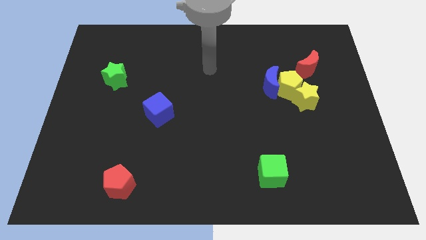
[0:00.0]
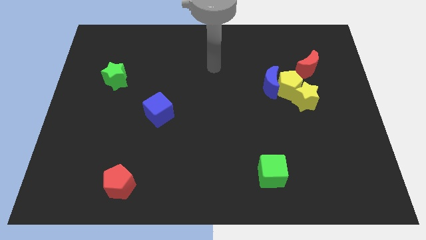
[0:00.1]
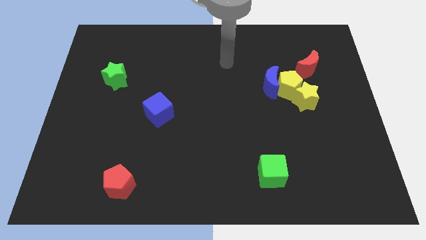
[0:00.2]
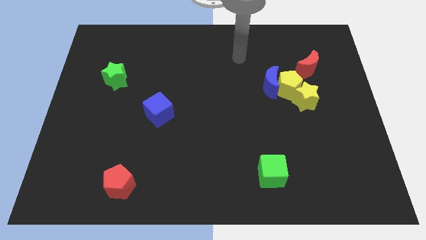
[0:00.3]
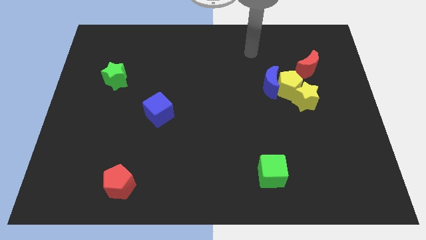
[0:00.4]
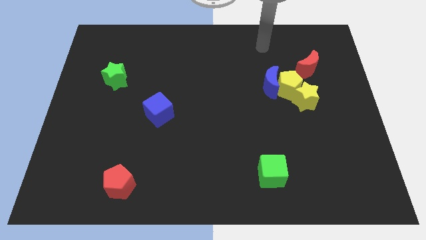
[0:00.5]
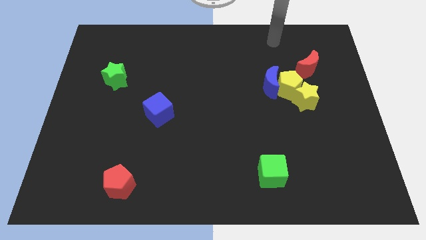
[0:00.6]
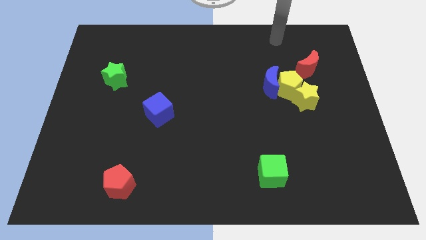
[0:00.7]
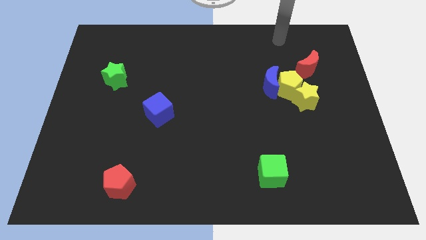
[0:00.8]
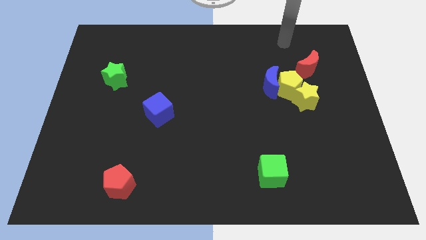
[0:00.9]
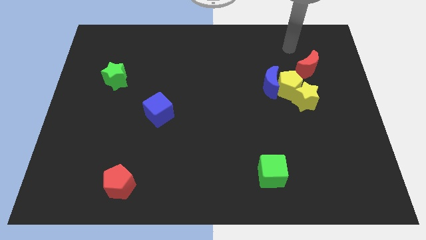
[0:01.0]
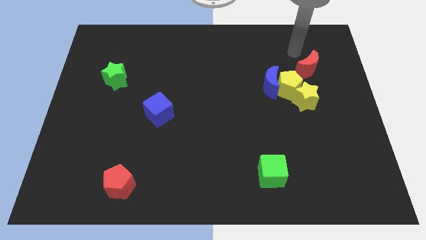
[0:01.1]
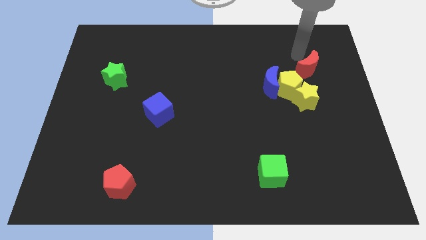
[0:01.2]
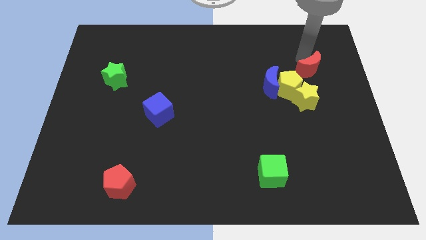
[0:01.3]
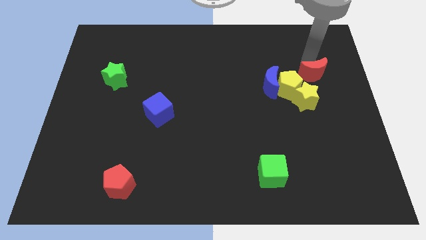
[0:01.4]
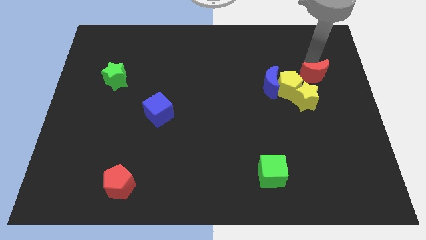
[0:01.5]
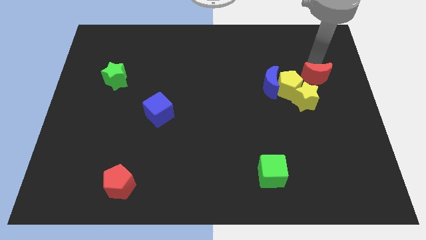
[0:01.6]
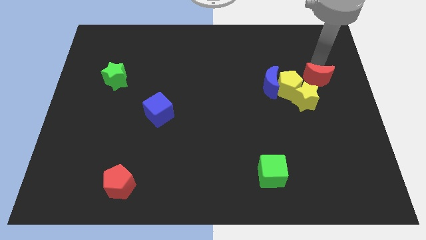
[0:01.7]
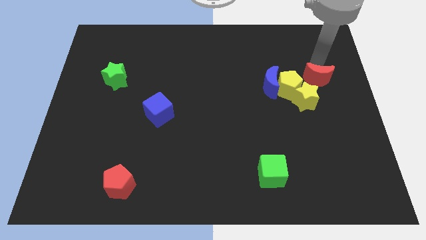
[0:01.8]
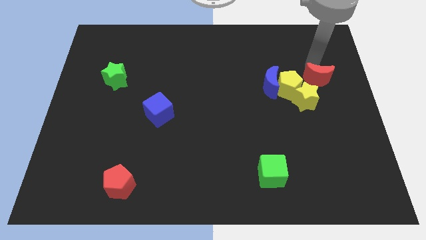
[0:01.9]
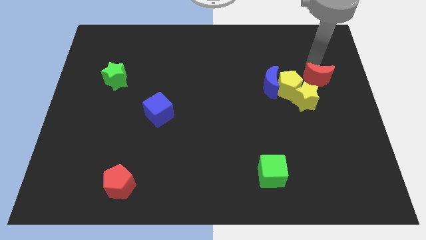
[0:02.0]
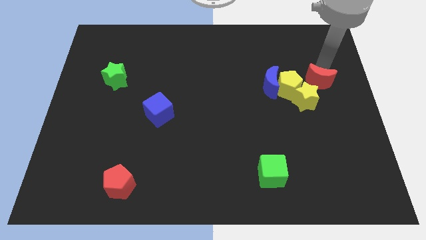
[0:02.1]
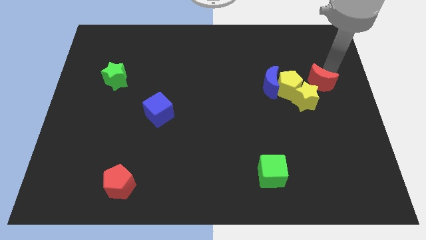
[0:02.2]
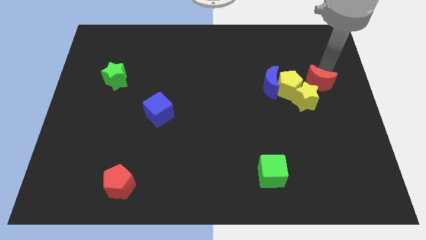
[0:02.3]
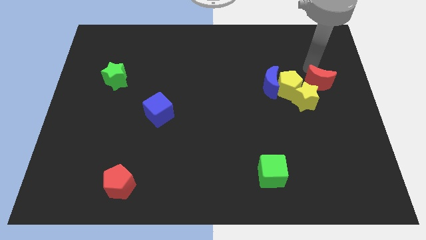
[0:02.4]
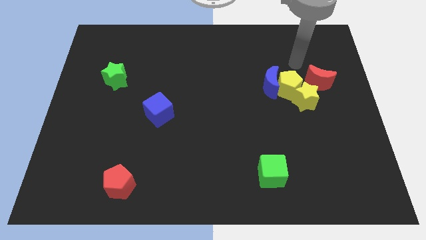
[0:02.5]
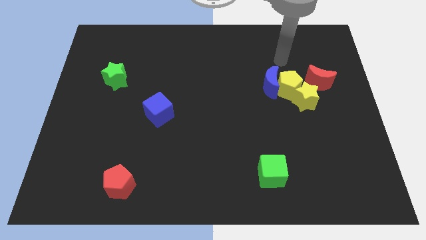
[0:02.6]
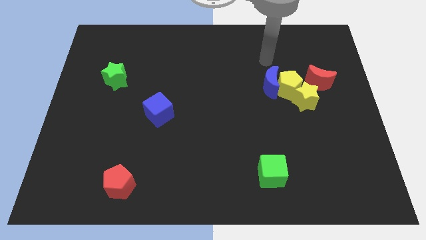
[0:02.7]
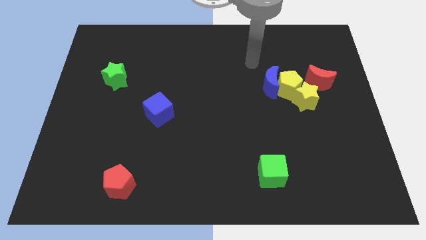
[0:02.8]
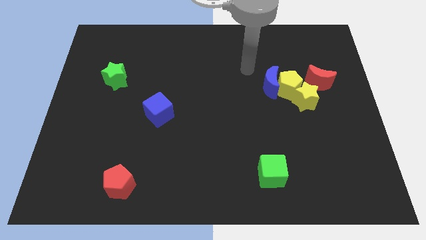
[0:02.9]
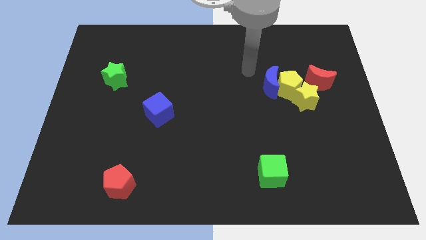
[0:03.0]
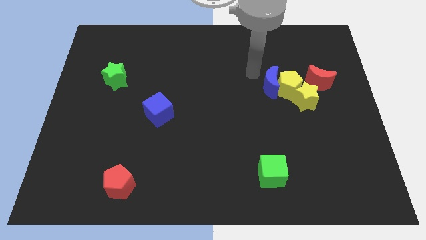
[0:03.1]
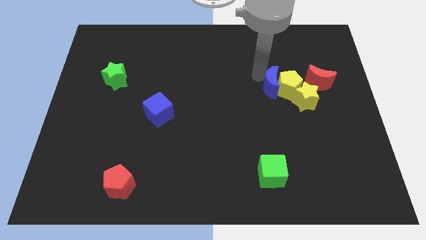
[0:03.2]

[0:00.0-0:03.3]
push the red moon diagonal right of yellow blocks

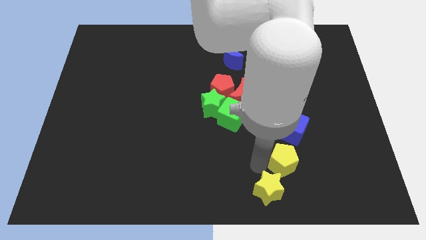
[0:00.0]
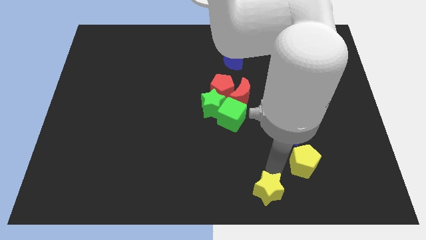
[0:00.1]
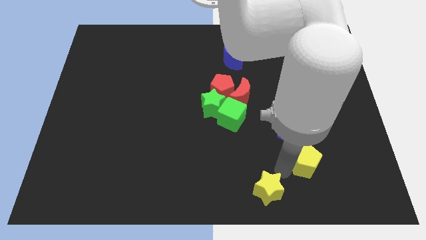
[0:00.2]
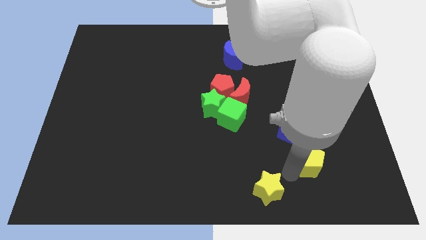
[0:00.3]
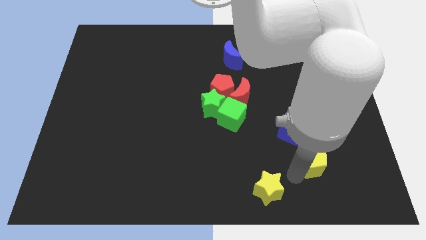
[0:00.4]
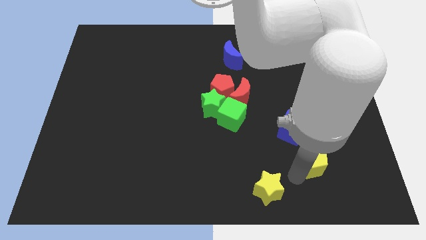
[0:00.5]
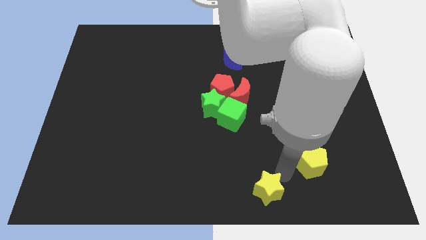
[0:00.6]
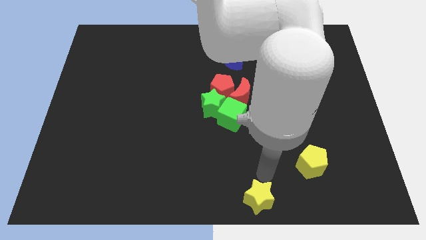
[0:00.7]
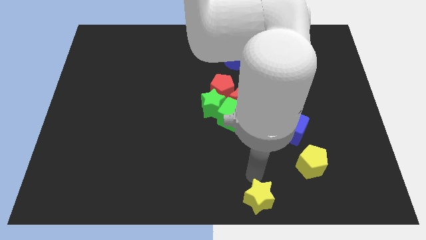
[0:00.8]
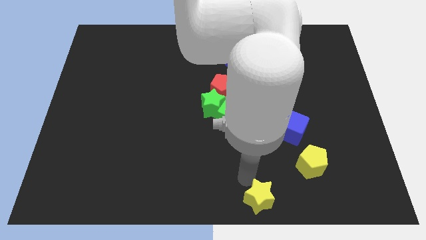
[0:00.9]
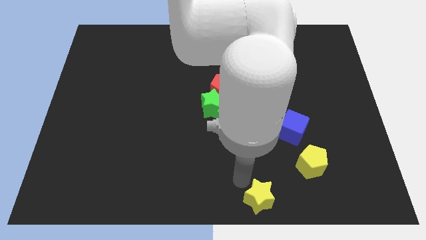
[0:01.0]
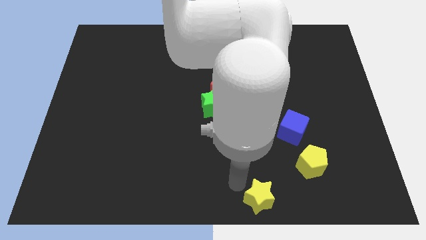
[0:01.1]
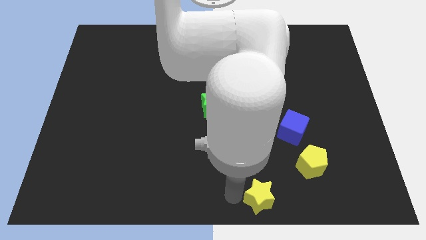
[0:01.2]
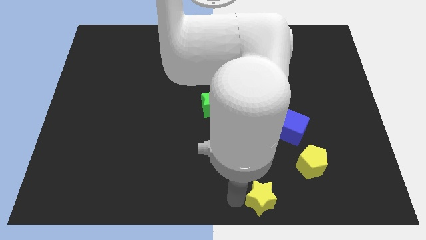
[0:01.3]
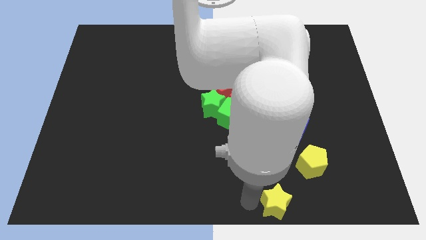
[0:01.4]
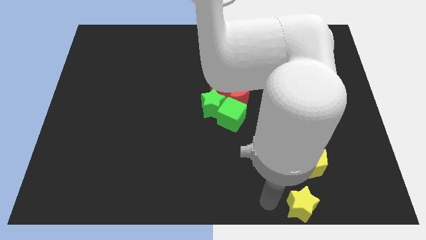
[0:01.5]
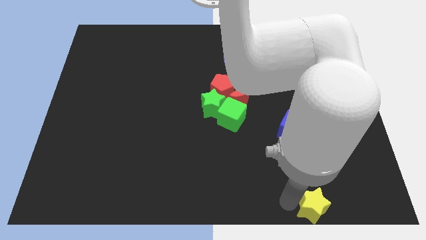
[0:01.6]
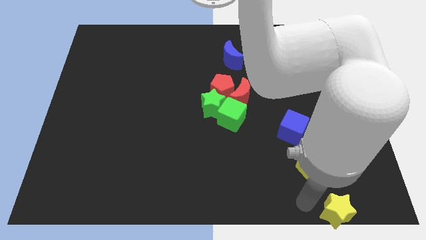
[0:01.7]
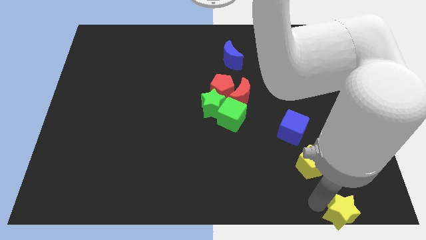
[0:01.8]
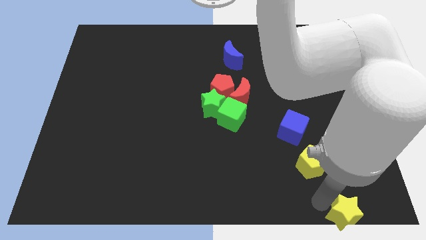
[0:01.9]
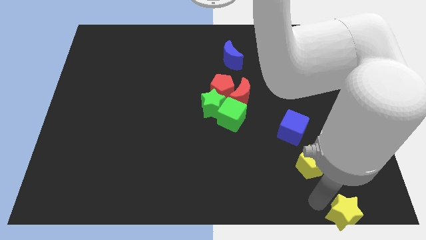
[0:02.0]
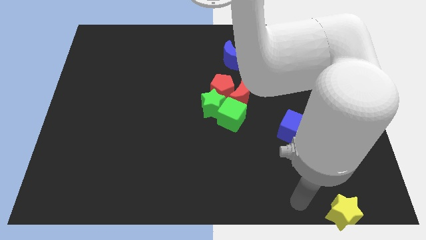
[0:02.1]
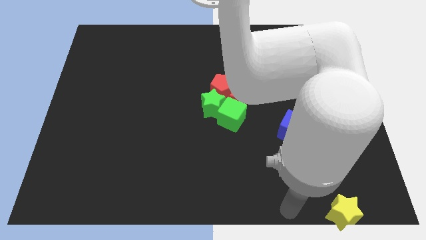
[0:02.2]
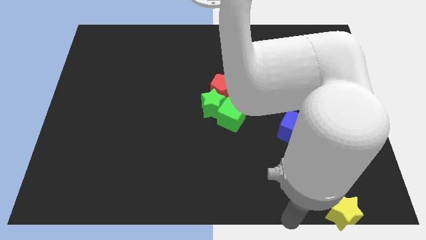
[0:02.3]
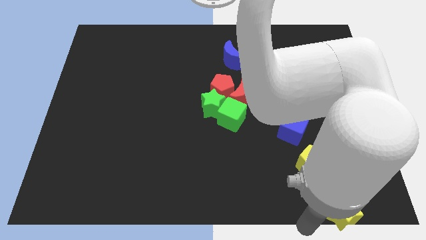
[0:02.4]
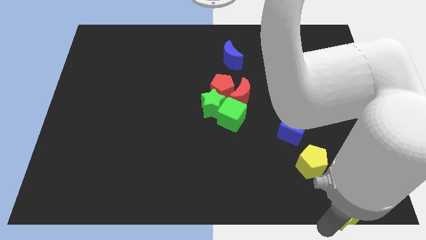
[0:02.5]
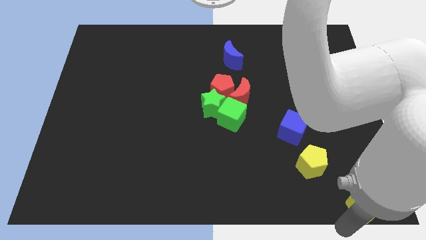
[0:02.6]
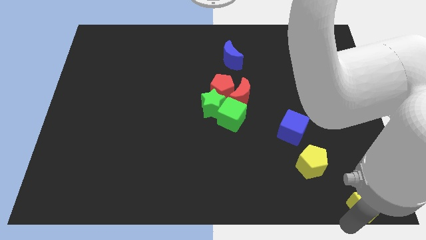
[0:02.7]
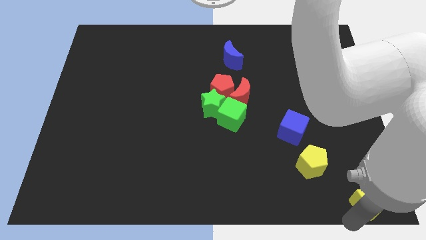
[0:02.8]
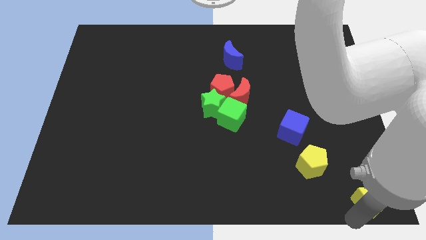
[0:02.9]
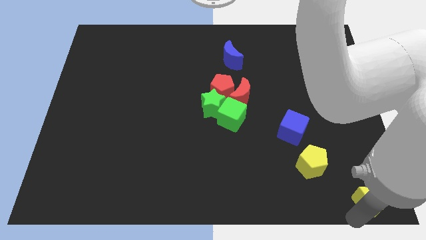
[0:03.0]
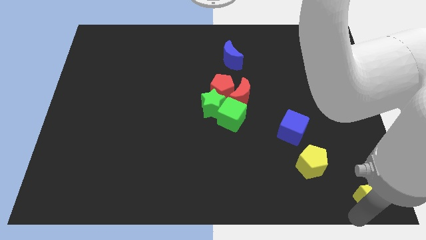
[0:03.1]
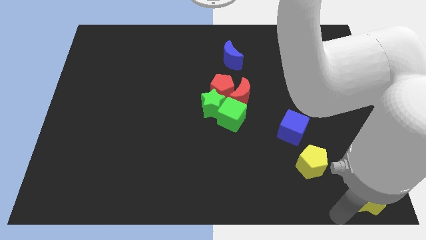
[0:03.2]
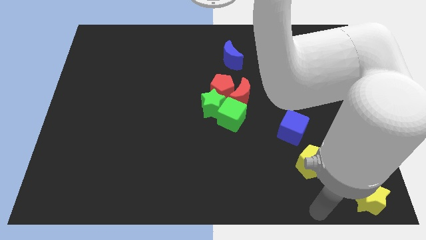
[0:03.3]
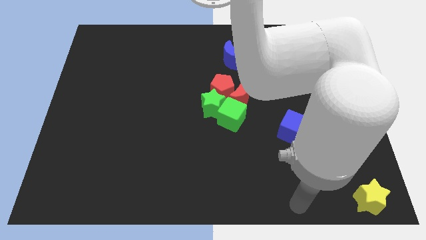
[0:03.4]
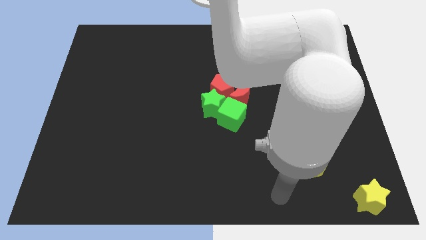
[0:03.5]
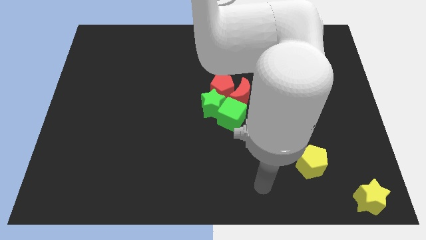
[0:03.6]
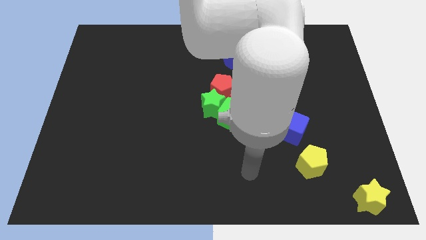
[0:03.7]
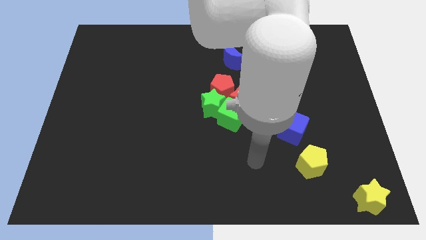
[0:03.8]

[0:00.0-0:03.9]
push the yellow star to the bottom right corner of the board

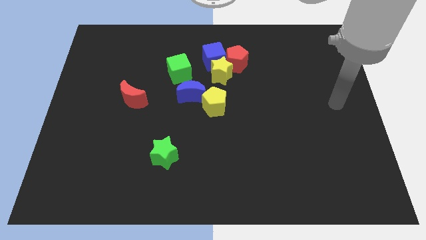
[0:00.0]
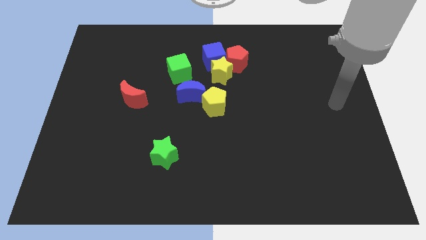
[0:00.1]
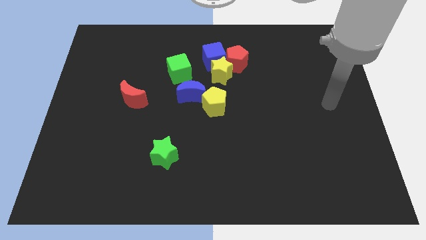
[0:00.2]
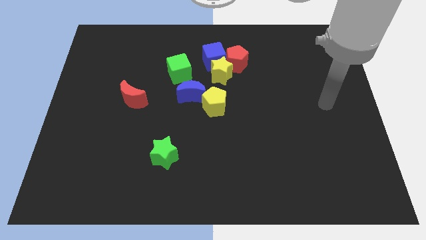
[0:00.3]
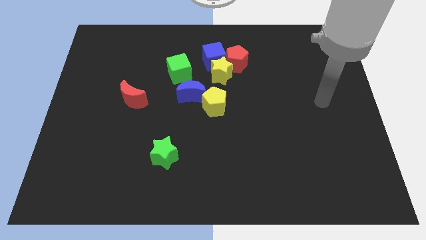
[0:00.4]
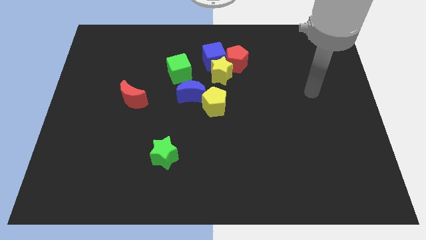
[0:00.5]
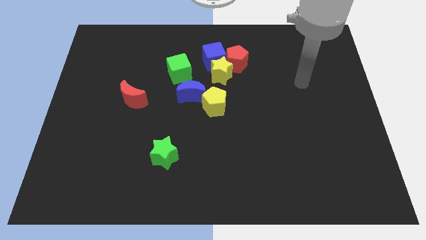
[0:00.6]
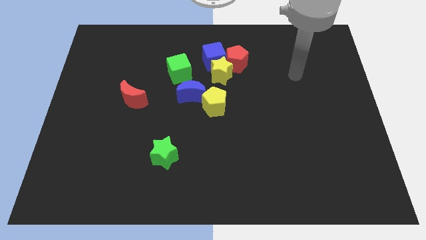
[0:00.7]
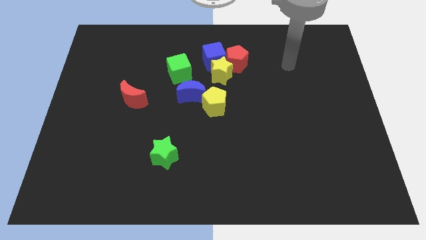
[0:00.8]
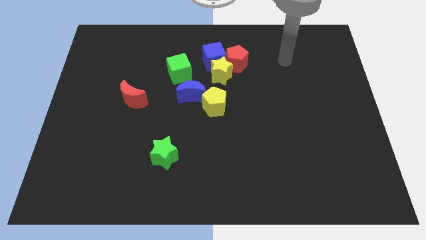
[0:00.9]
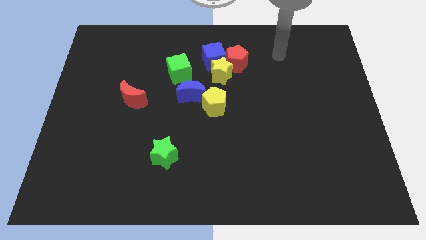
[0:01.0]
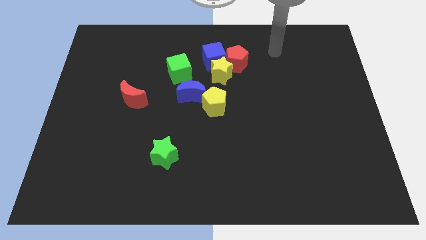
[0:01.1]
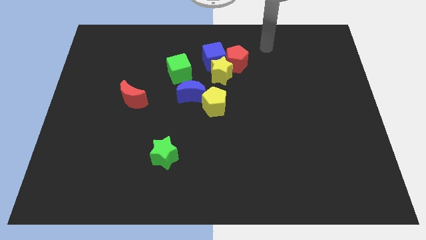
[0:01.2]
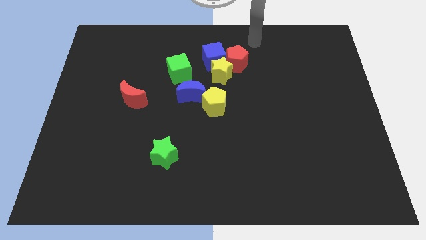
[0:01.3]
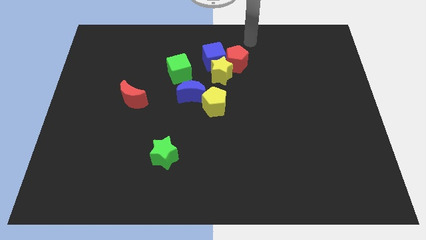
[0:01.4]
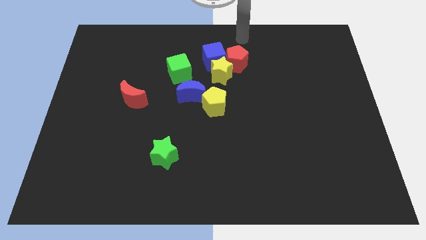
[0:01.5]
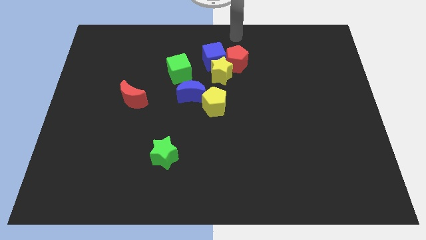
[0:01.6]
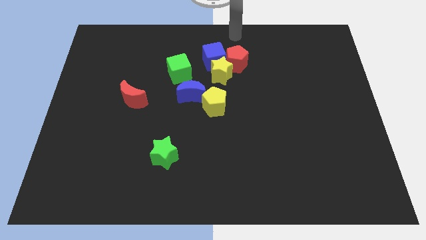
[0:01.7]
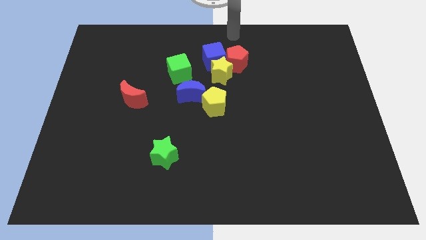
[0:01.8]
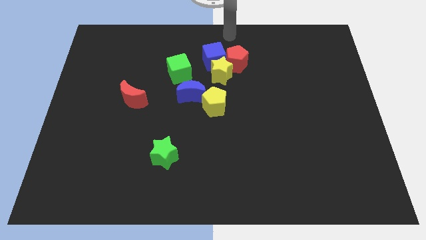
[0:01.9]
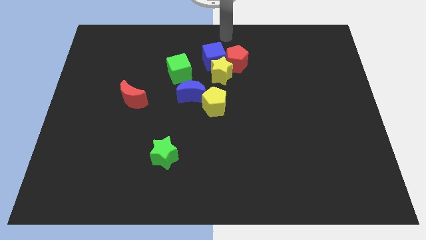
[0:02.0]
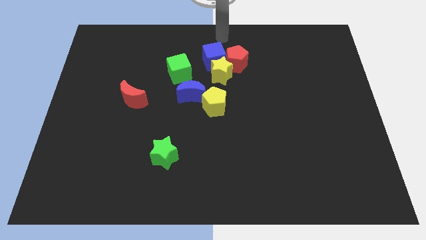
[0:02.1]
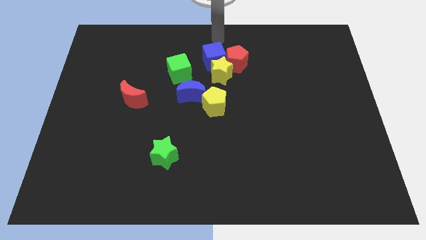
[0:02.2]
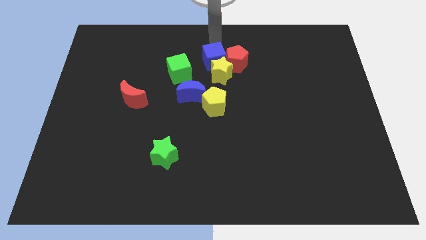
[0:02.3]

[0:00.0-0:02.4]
point your arm at the top side of the blue cube
